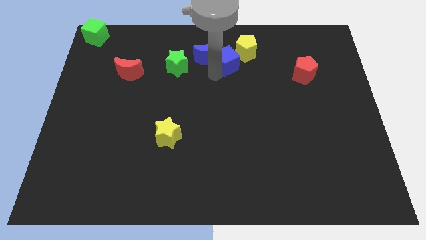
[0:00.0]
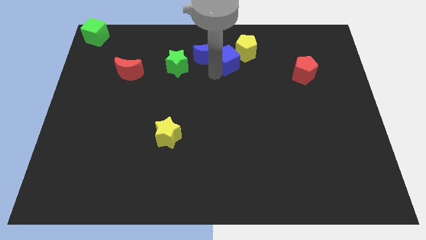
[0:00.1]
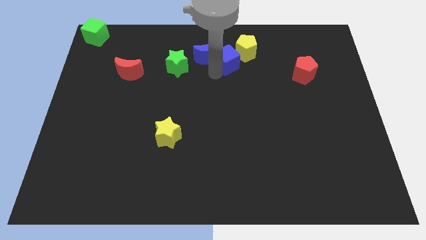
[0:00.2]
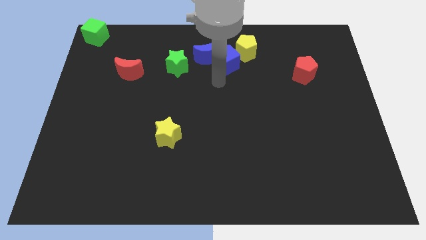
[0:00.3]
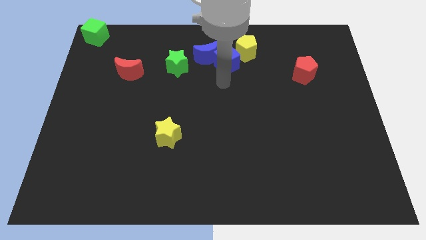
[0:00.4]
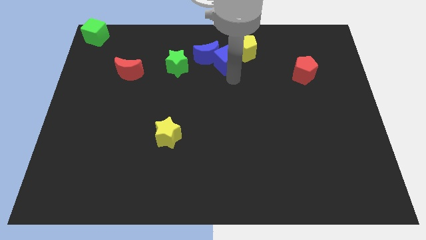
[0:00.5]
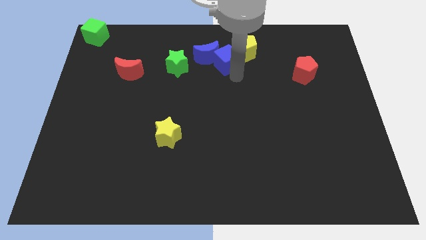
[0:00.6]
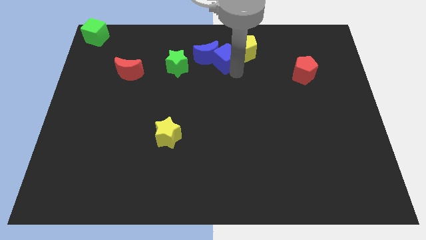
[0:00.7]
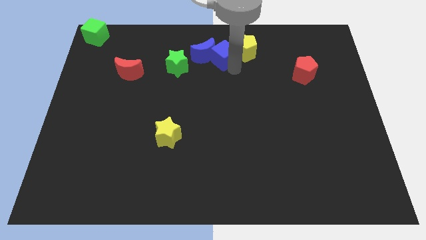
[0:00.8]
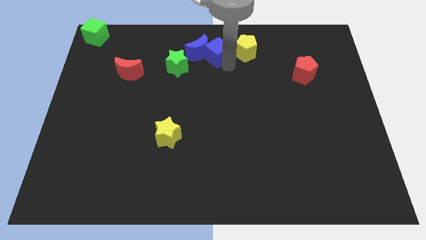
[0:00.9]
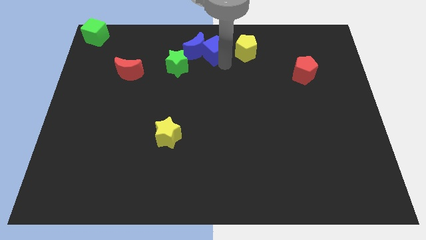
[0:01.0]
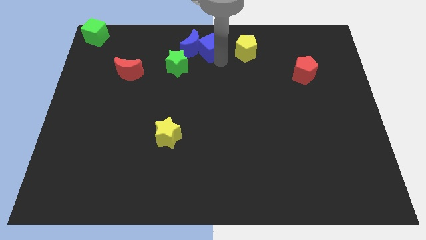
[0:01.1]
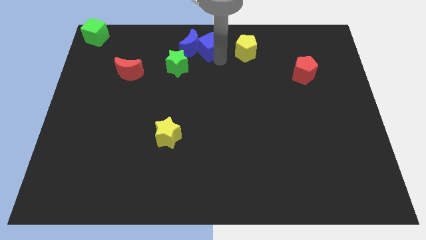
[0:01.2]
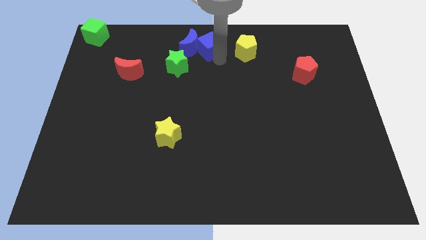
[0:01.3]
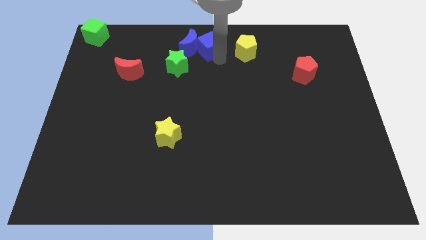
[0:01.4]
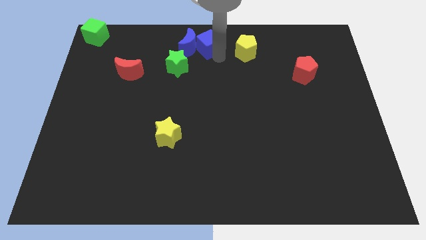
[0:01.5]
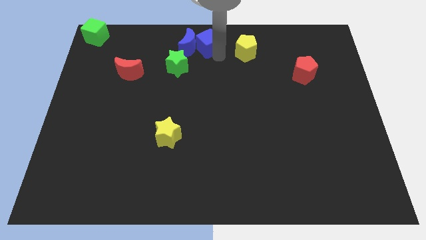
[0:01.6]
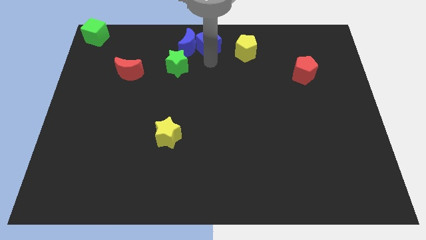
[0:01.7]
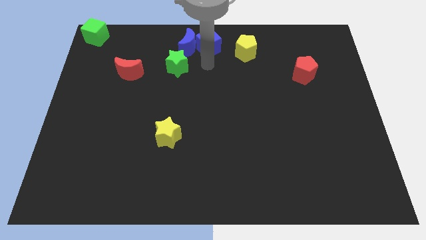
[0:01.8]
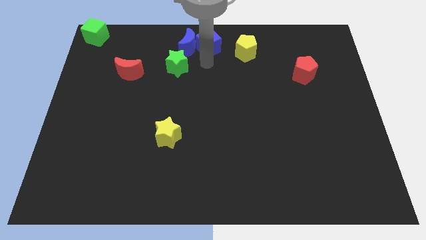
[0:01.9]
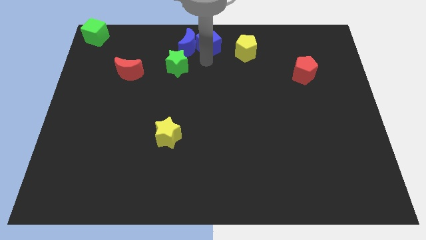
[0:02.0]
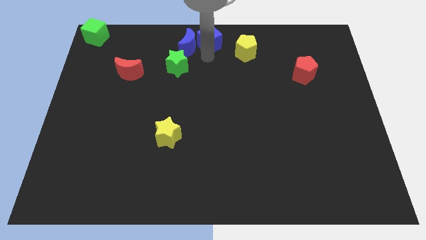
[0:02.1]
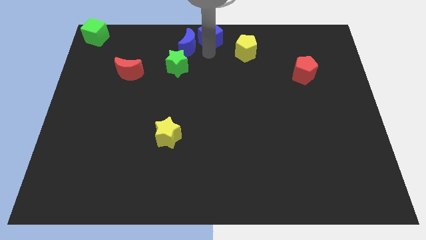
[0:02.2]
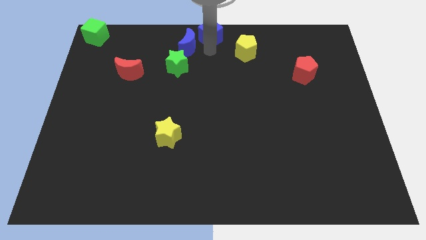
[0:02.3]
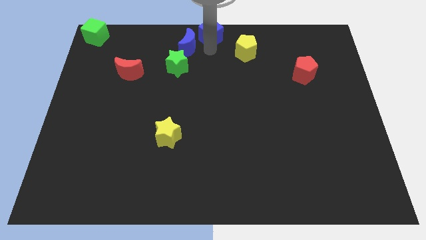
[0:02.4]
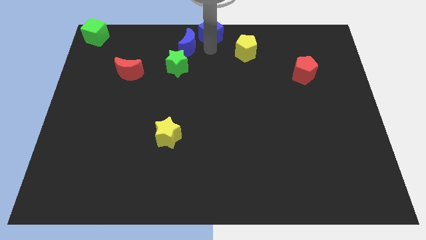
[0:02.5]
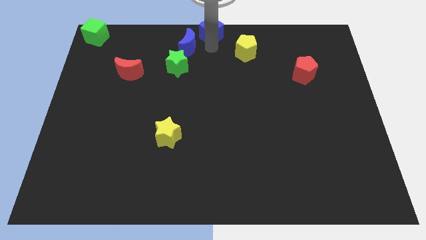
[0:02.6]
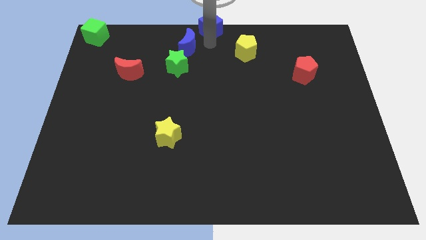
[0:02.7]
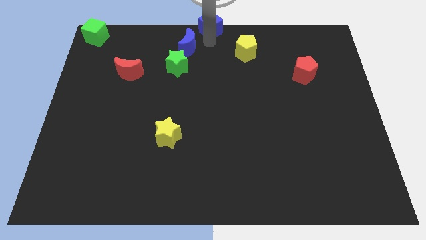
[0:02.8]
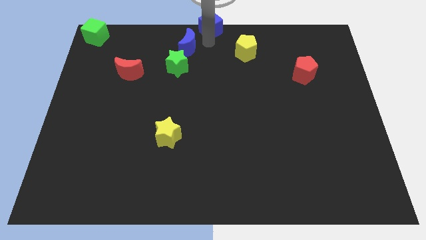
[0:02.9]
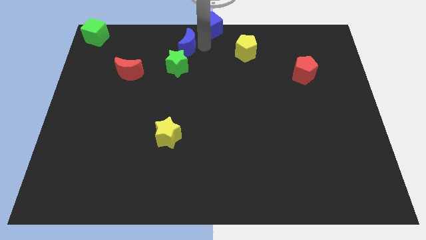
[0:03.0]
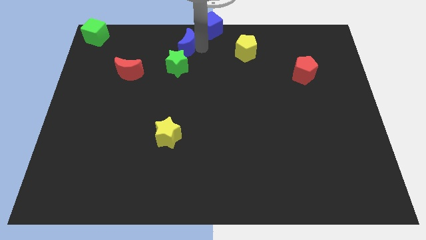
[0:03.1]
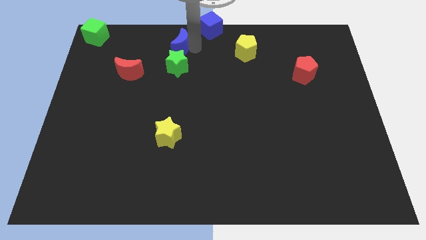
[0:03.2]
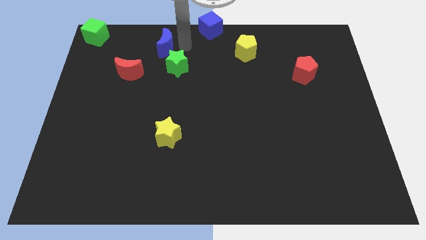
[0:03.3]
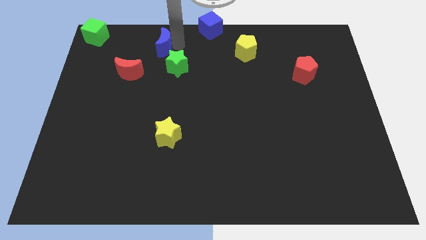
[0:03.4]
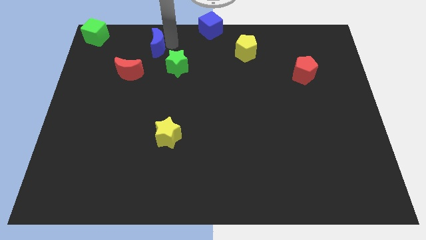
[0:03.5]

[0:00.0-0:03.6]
move the blue cube to the top middle of the board

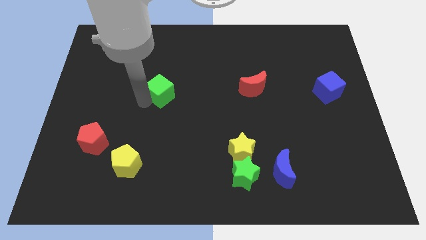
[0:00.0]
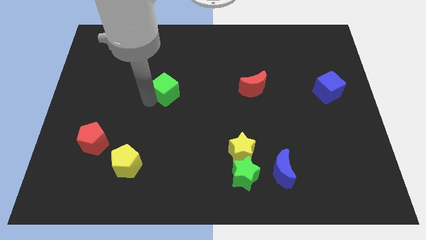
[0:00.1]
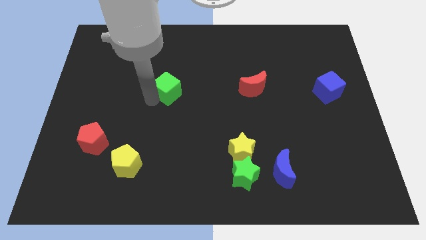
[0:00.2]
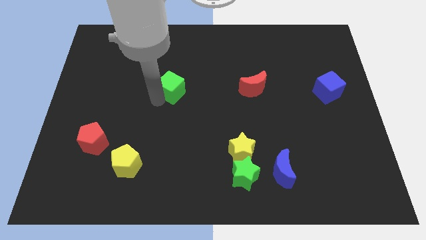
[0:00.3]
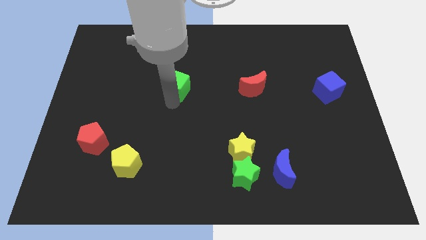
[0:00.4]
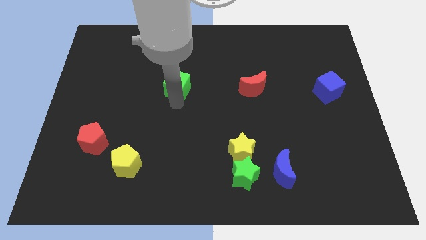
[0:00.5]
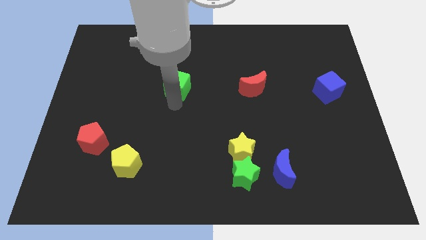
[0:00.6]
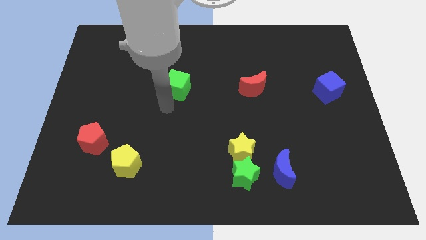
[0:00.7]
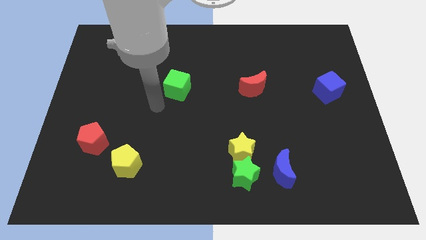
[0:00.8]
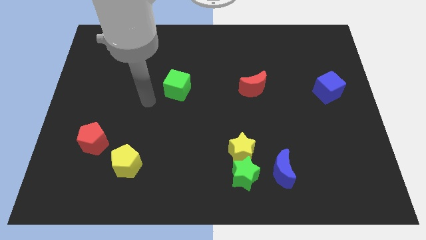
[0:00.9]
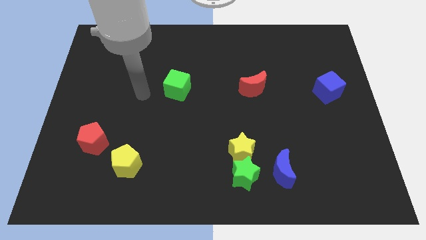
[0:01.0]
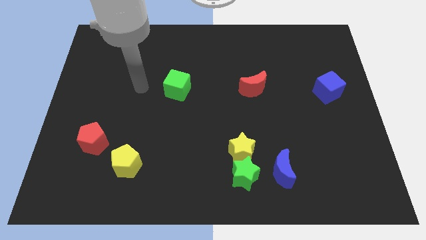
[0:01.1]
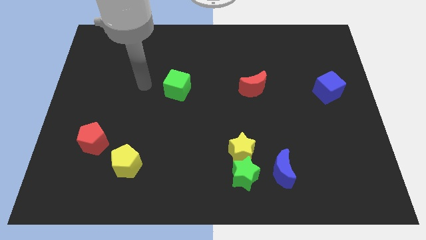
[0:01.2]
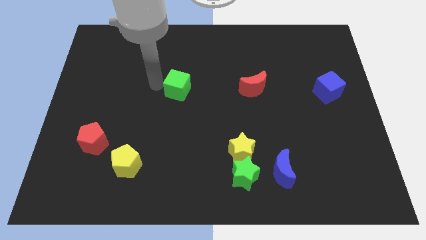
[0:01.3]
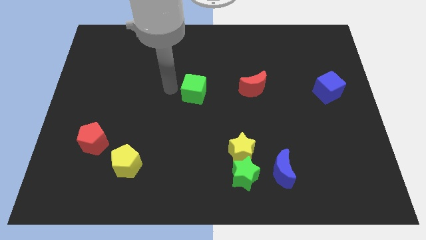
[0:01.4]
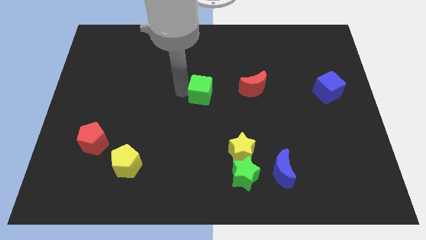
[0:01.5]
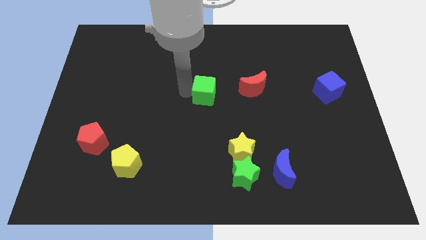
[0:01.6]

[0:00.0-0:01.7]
move green cube towards red moon

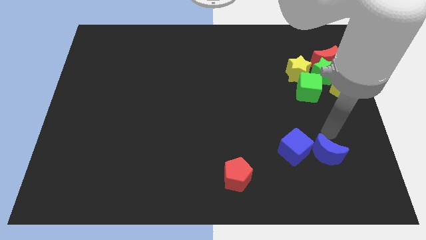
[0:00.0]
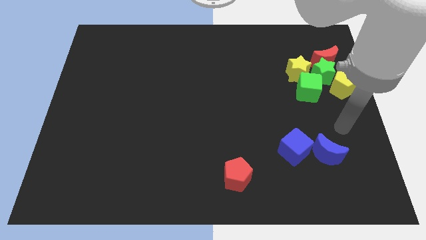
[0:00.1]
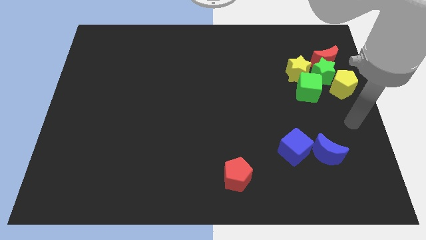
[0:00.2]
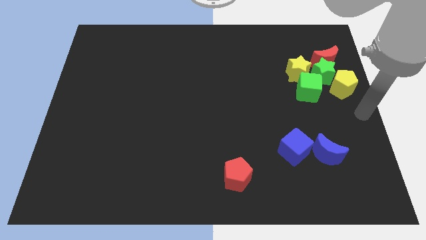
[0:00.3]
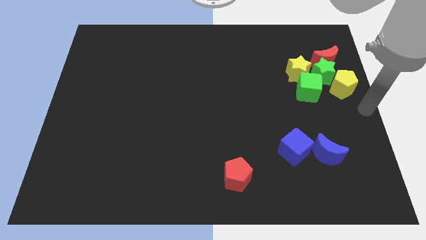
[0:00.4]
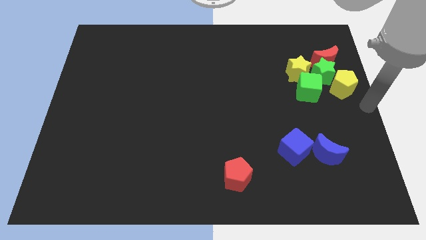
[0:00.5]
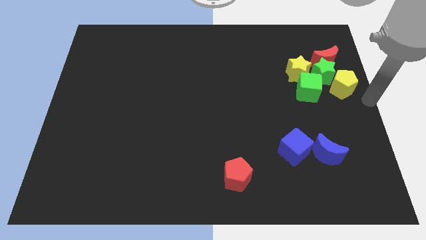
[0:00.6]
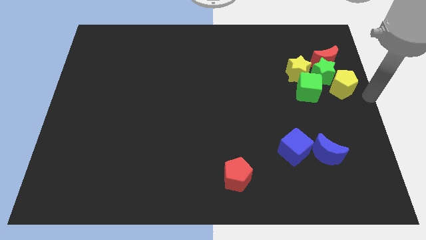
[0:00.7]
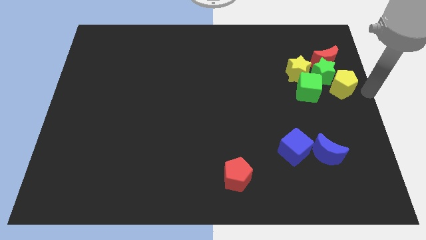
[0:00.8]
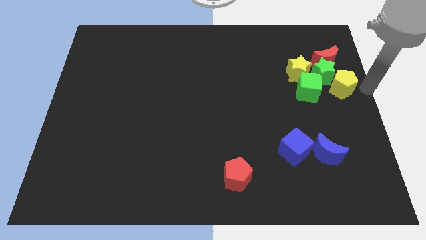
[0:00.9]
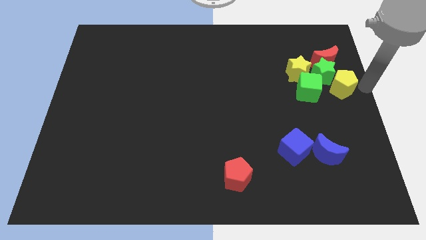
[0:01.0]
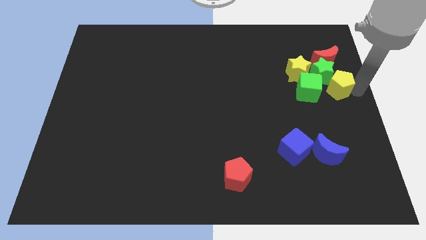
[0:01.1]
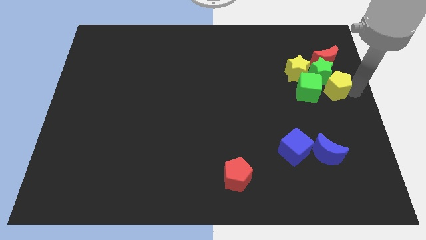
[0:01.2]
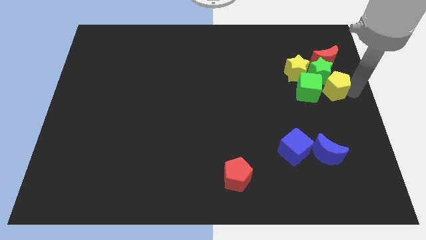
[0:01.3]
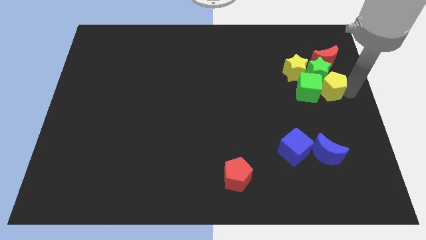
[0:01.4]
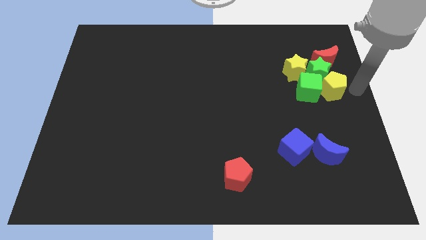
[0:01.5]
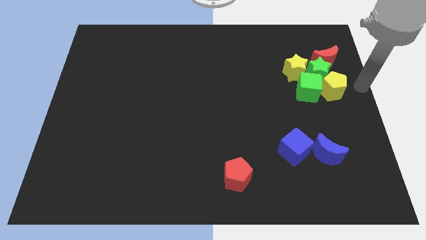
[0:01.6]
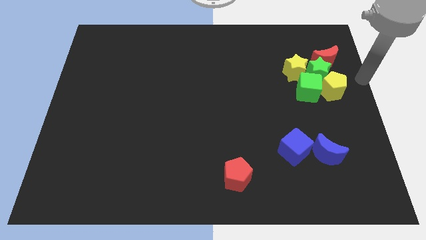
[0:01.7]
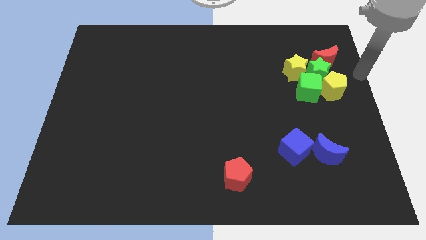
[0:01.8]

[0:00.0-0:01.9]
push the yellow pentagon close to the green cube

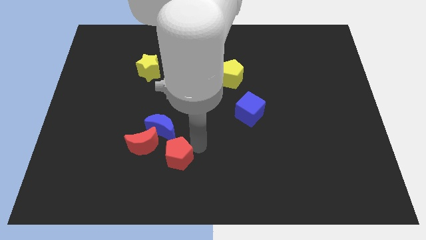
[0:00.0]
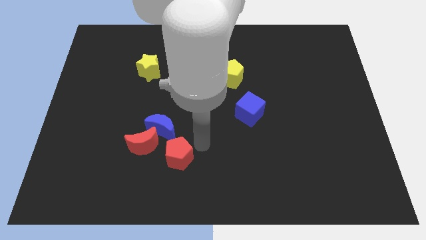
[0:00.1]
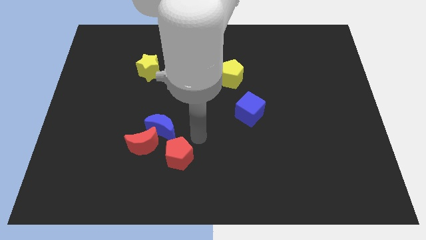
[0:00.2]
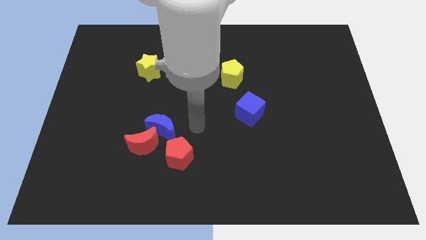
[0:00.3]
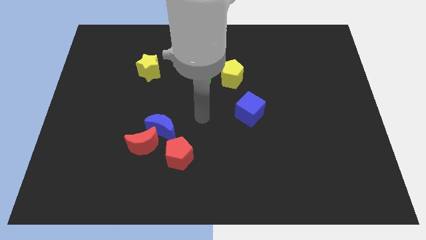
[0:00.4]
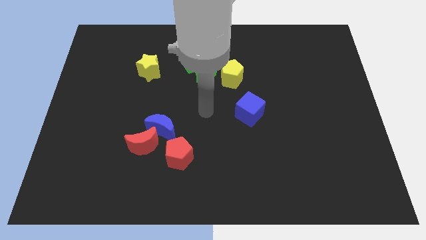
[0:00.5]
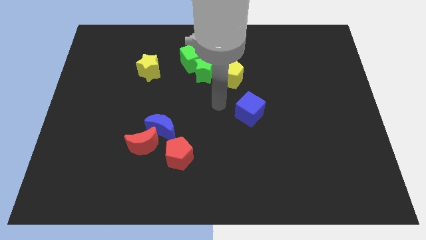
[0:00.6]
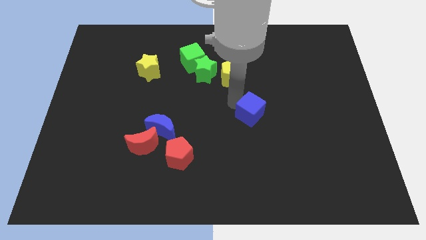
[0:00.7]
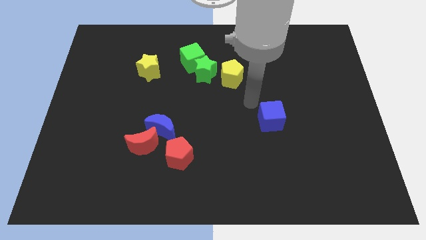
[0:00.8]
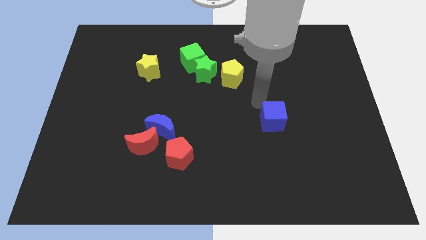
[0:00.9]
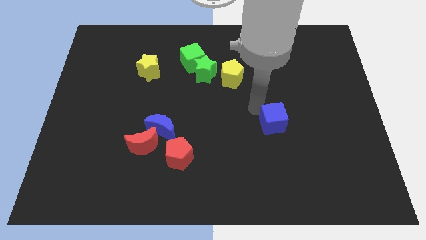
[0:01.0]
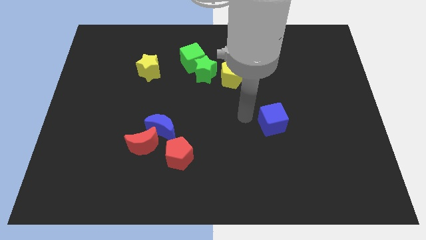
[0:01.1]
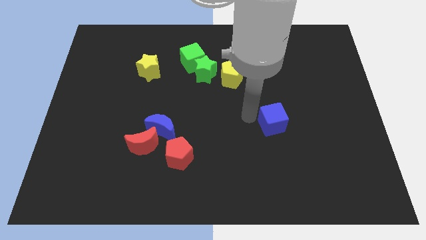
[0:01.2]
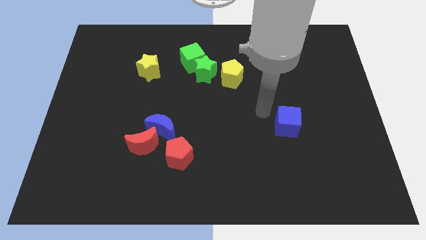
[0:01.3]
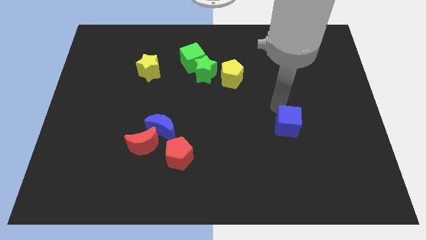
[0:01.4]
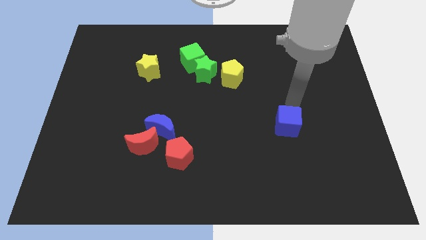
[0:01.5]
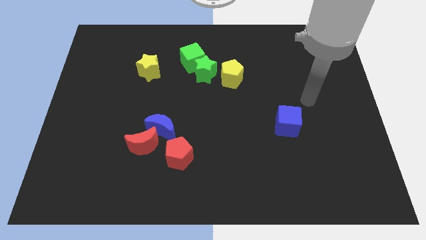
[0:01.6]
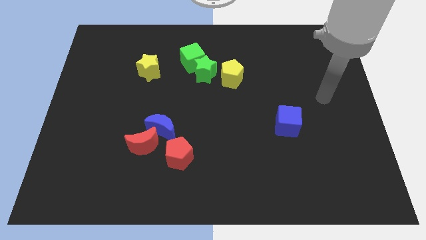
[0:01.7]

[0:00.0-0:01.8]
move the blue cube slightly towards the right

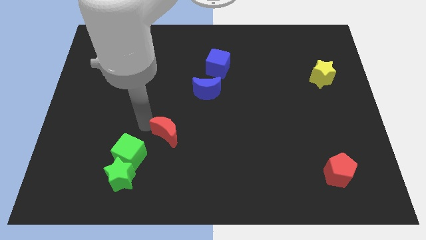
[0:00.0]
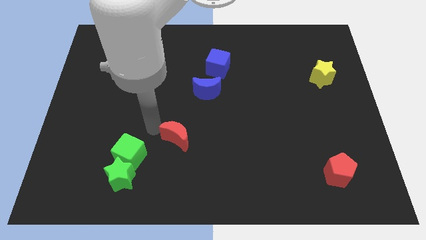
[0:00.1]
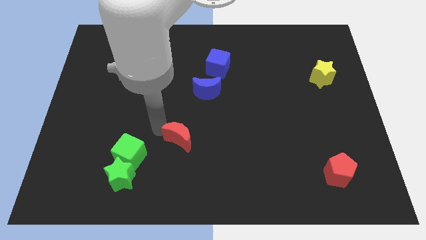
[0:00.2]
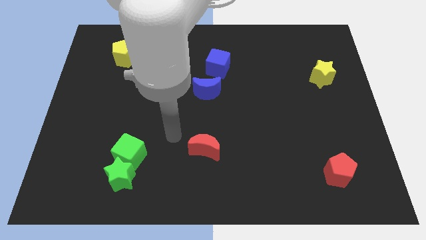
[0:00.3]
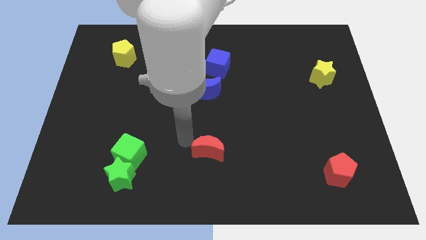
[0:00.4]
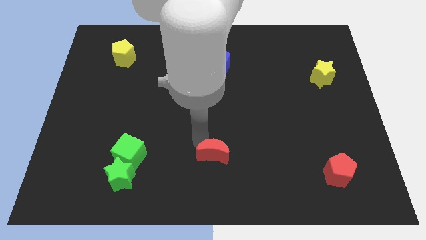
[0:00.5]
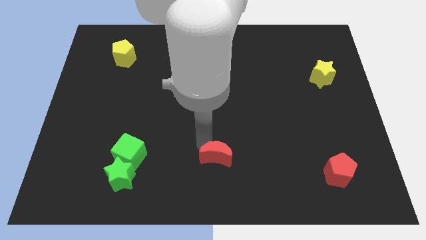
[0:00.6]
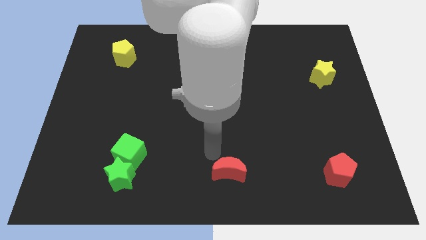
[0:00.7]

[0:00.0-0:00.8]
place the red moon in between the red pentagon and green cube
